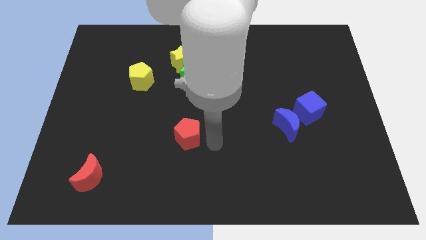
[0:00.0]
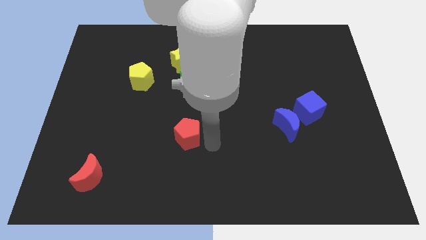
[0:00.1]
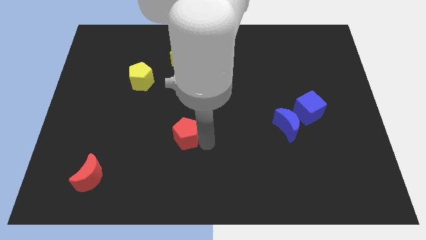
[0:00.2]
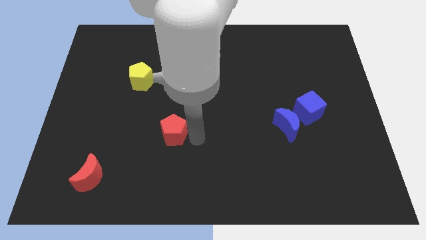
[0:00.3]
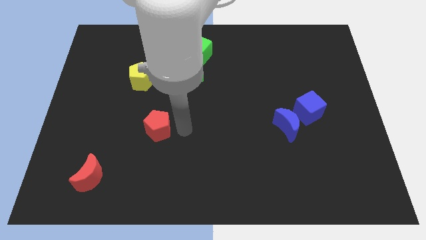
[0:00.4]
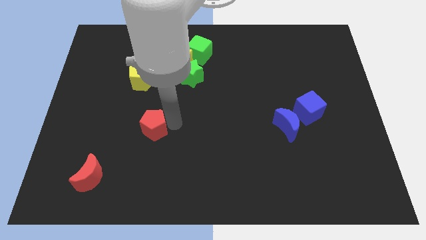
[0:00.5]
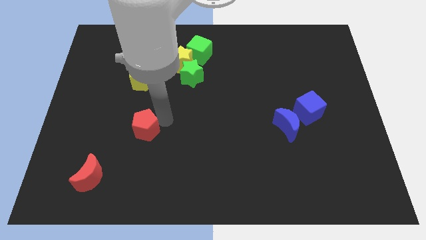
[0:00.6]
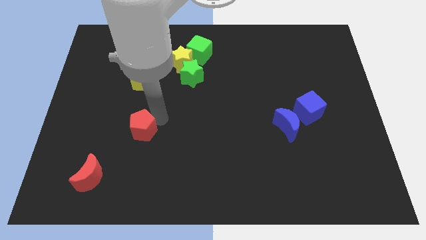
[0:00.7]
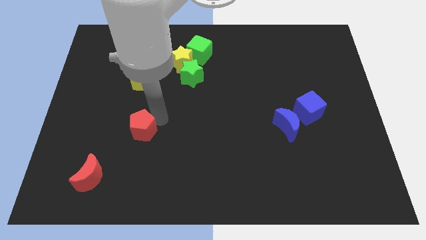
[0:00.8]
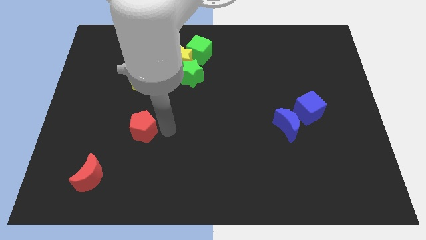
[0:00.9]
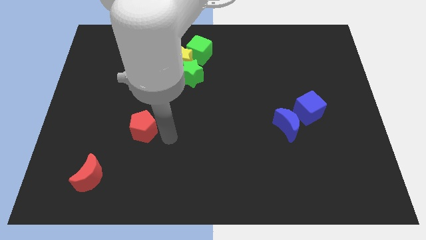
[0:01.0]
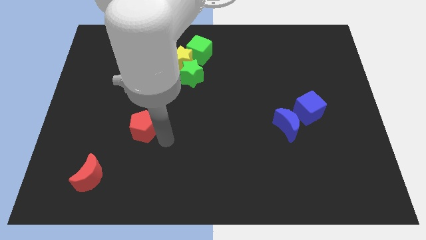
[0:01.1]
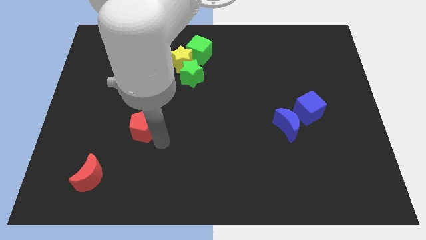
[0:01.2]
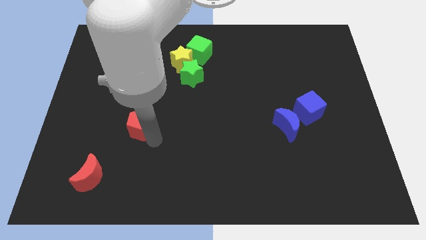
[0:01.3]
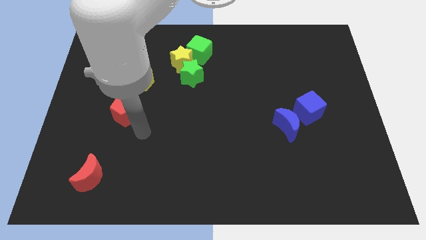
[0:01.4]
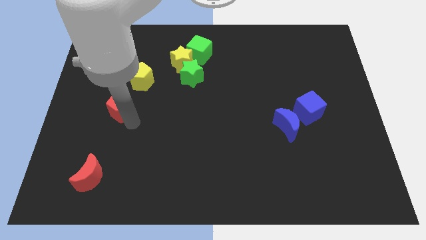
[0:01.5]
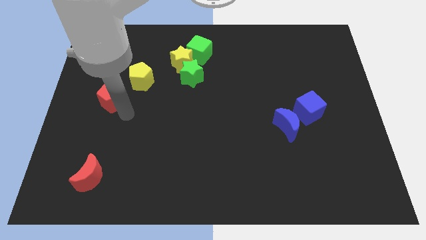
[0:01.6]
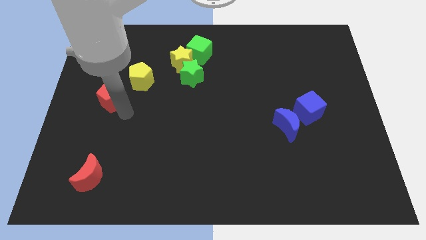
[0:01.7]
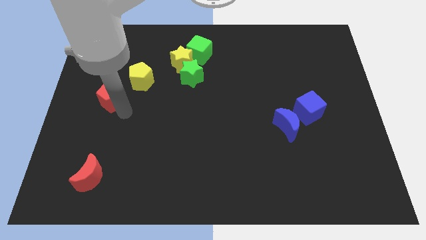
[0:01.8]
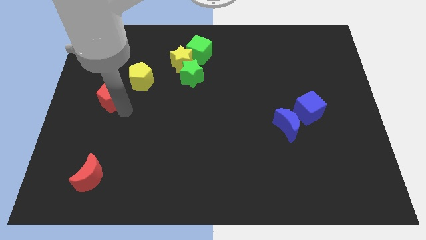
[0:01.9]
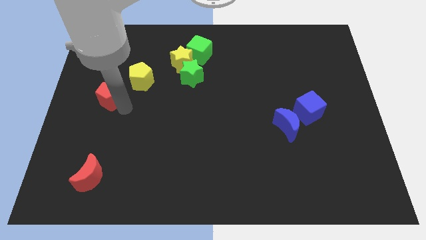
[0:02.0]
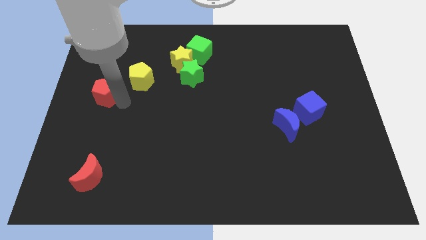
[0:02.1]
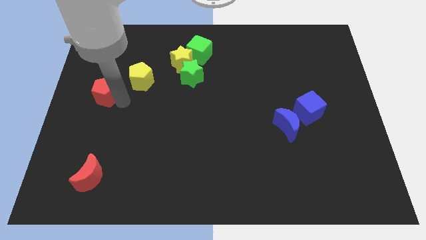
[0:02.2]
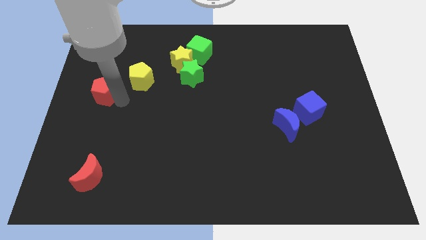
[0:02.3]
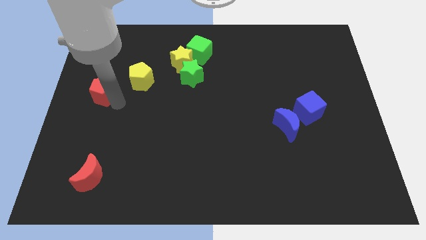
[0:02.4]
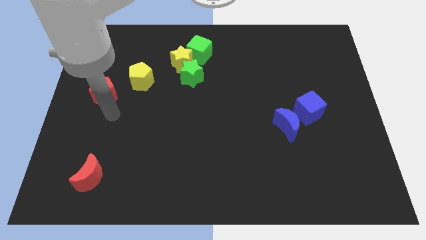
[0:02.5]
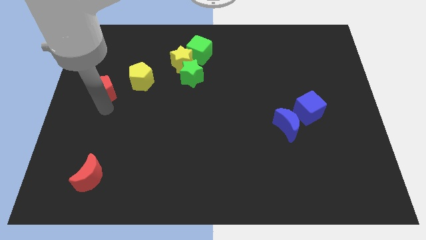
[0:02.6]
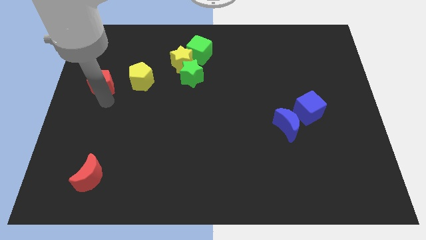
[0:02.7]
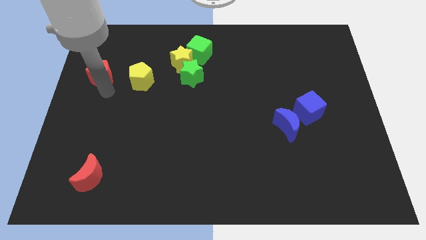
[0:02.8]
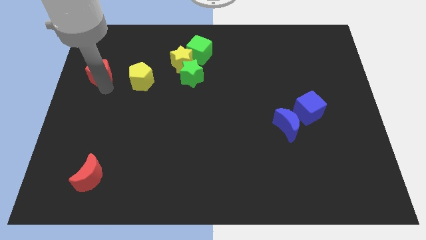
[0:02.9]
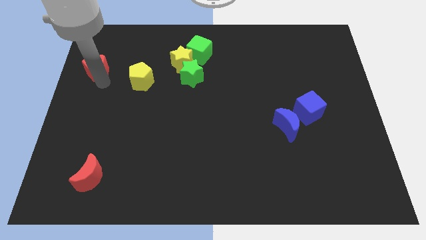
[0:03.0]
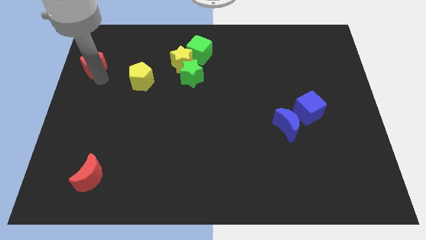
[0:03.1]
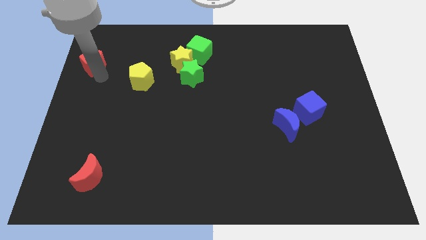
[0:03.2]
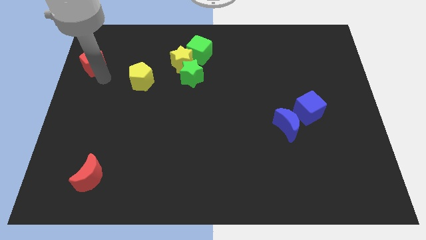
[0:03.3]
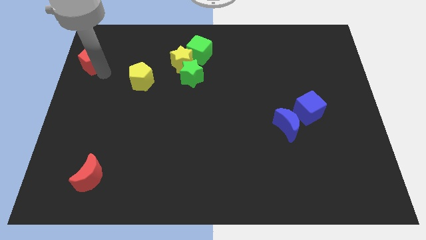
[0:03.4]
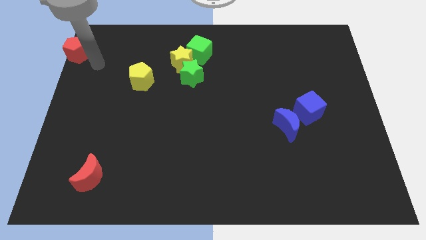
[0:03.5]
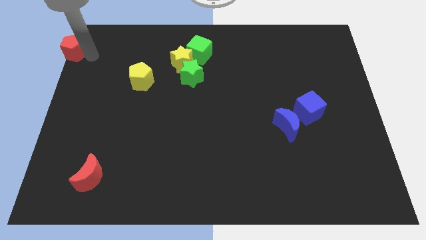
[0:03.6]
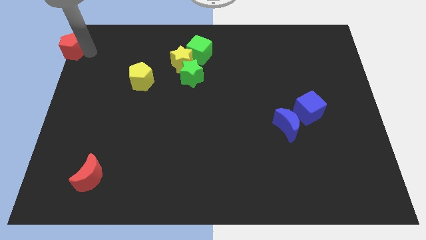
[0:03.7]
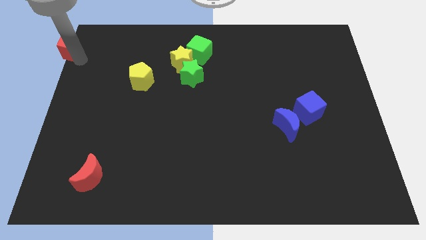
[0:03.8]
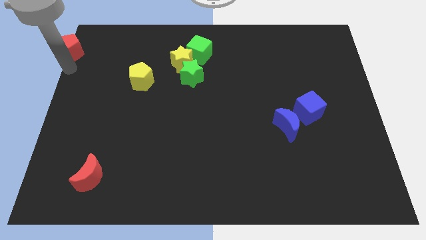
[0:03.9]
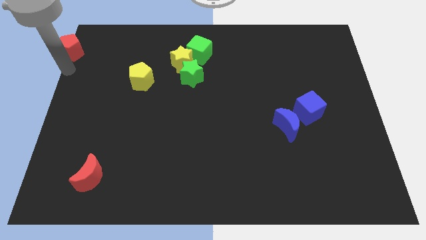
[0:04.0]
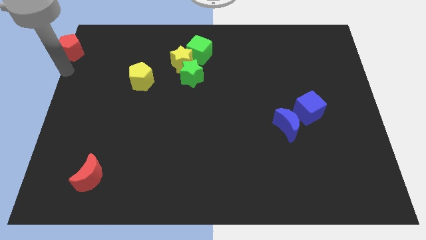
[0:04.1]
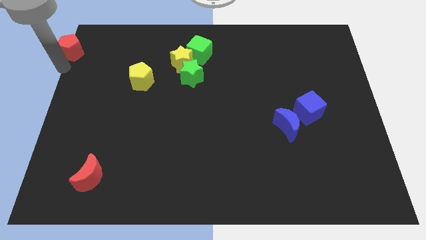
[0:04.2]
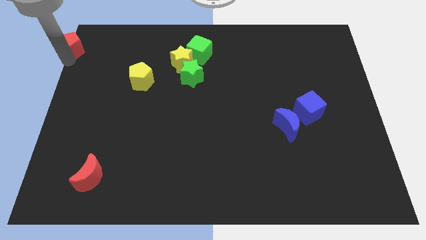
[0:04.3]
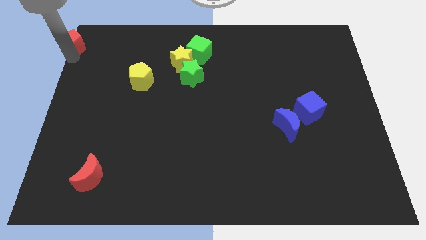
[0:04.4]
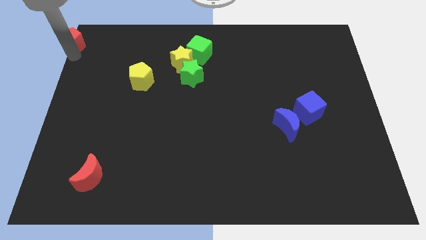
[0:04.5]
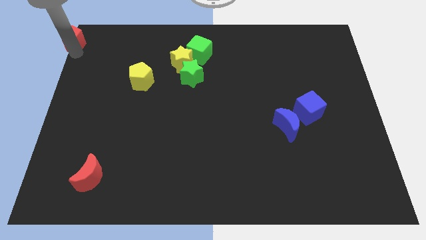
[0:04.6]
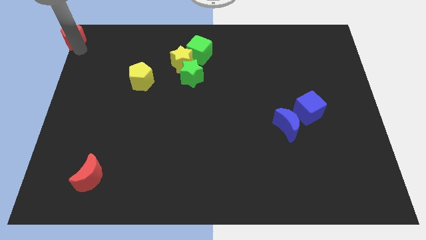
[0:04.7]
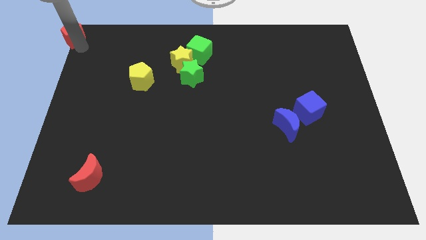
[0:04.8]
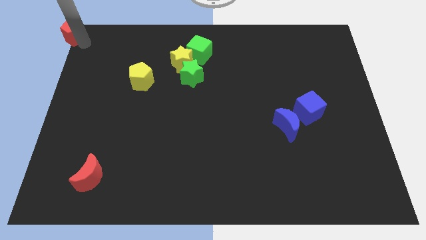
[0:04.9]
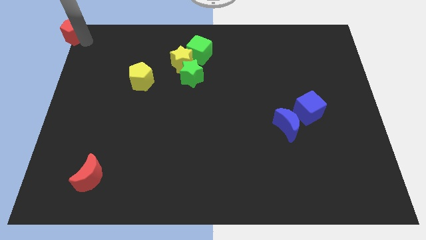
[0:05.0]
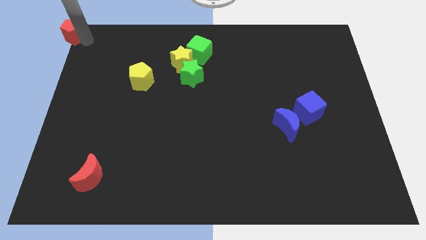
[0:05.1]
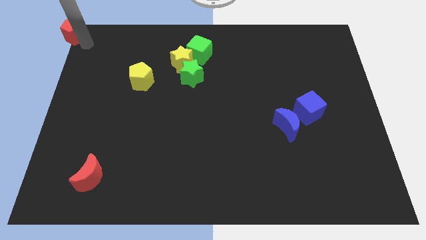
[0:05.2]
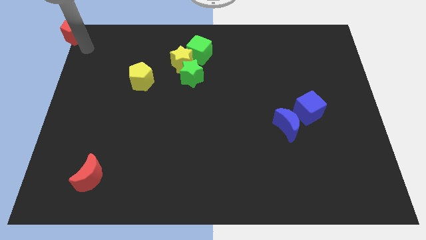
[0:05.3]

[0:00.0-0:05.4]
push the red pentagon to the top left corner of the board

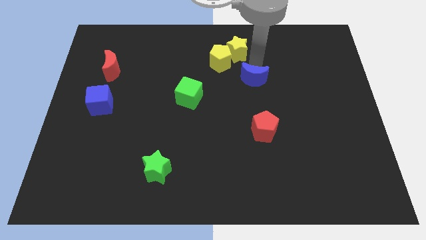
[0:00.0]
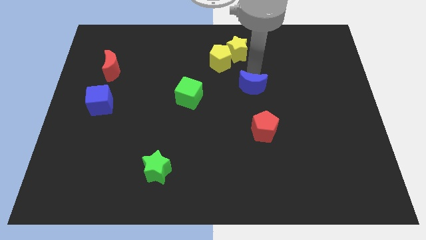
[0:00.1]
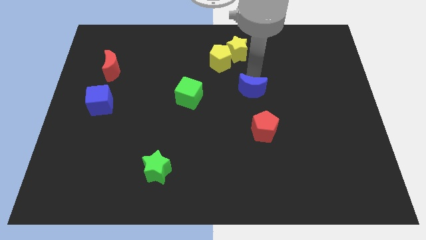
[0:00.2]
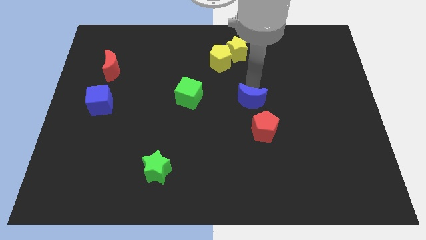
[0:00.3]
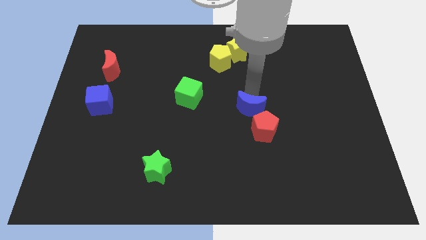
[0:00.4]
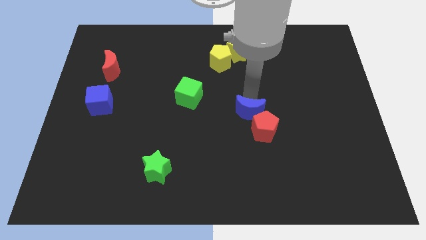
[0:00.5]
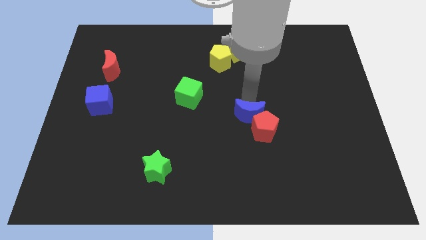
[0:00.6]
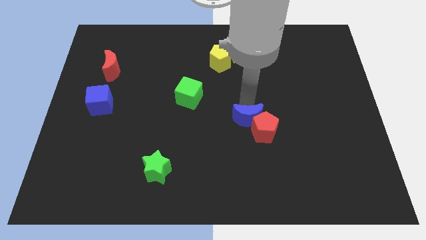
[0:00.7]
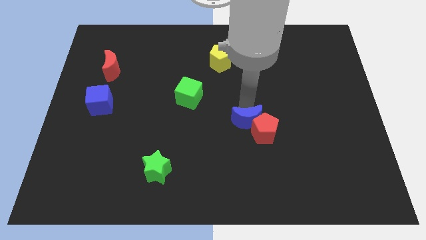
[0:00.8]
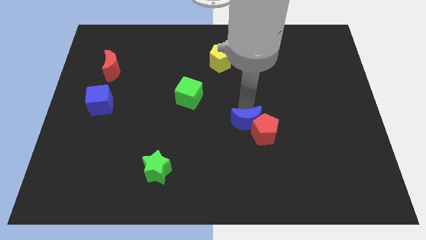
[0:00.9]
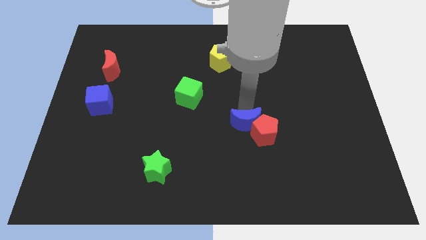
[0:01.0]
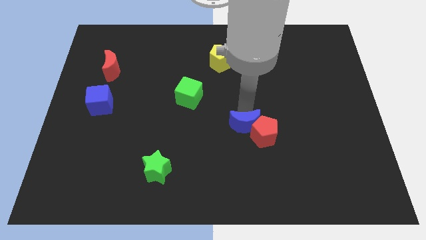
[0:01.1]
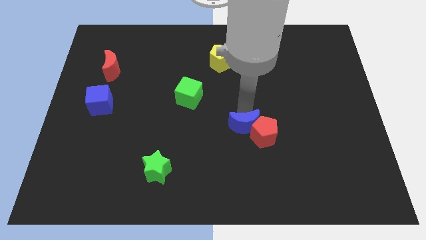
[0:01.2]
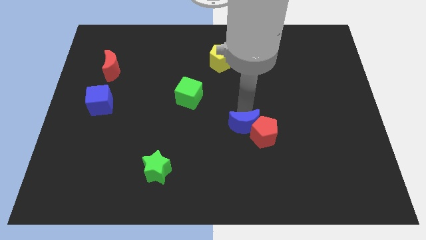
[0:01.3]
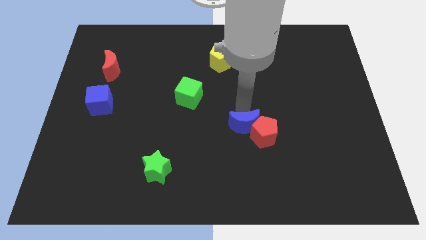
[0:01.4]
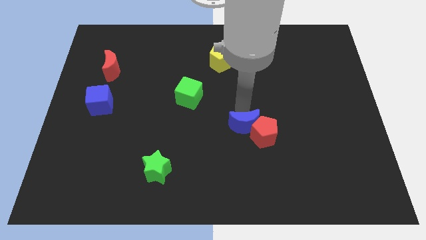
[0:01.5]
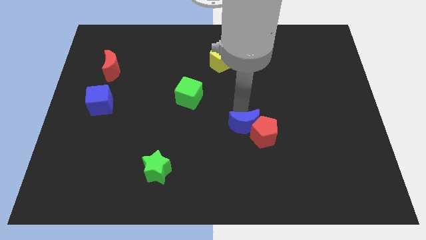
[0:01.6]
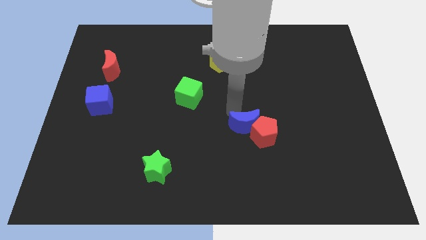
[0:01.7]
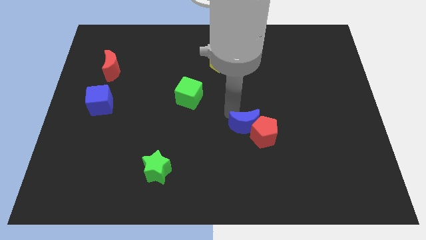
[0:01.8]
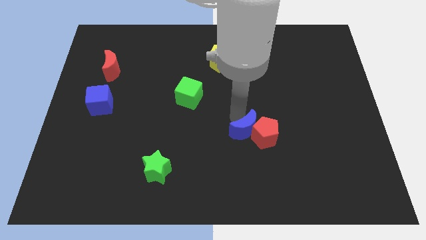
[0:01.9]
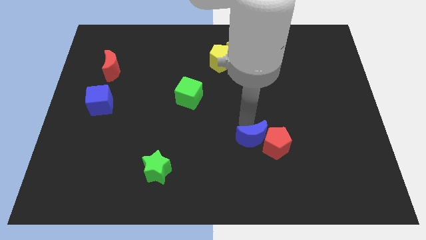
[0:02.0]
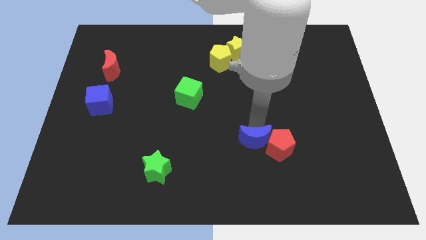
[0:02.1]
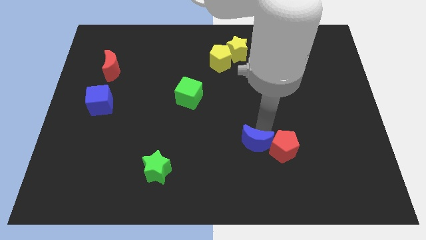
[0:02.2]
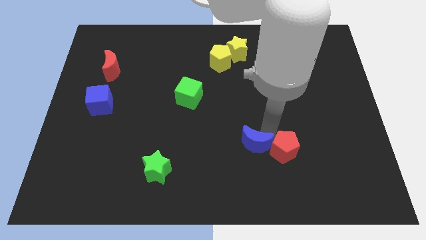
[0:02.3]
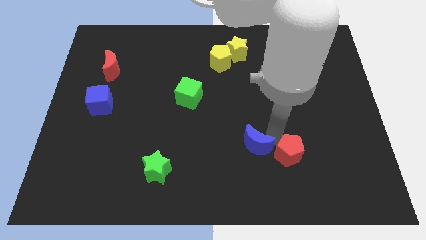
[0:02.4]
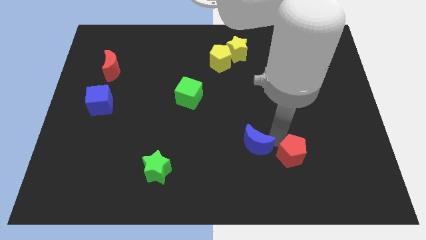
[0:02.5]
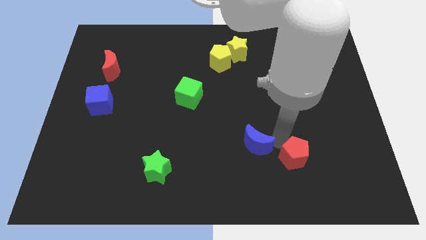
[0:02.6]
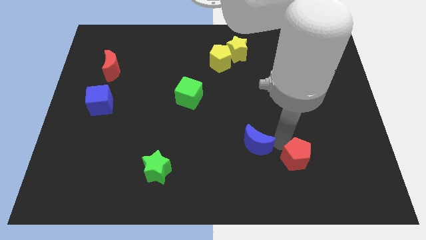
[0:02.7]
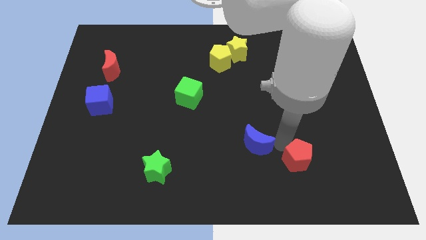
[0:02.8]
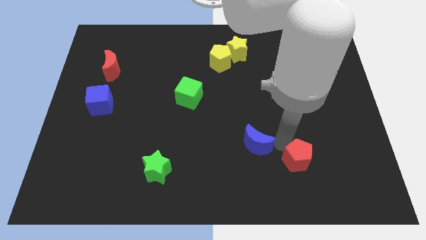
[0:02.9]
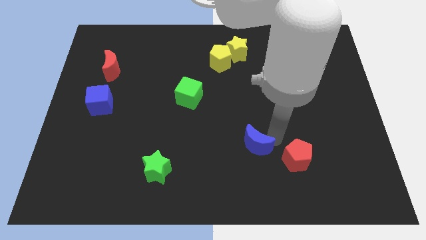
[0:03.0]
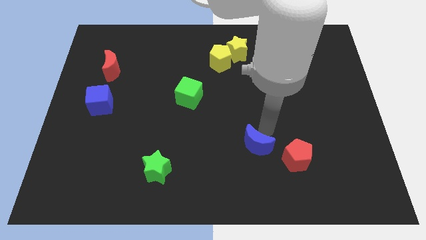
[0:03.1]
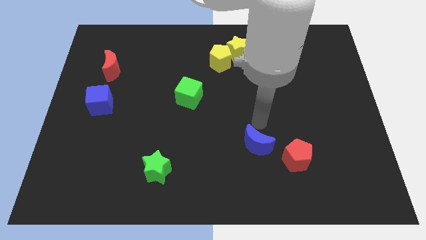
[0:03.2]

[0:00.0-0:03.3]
push the blue moon into the red pentagon

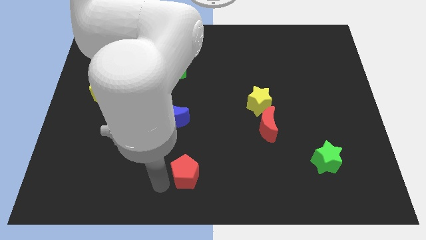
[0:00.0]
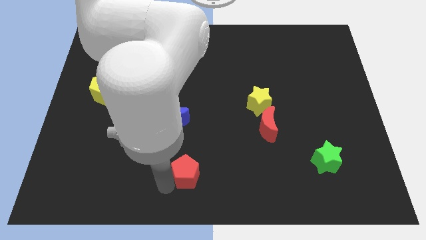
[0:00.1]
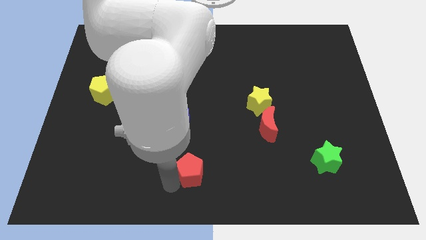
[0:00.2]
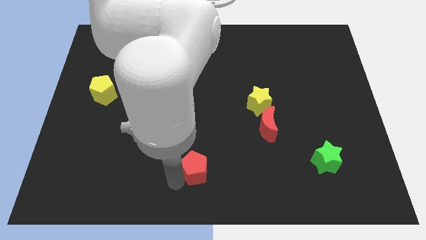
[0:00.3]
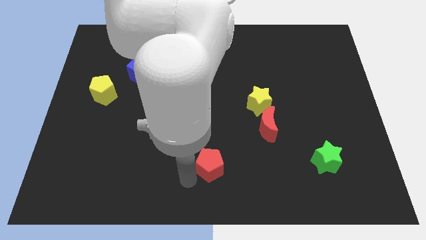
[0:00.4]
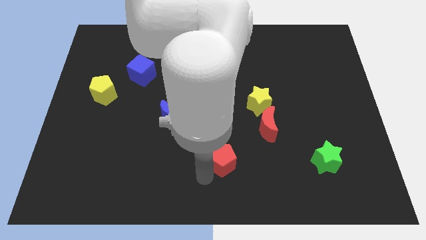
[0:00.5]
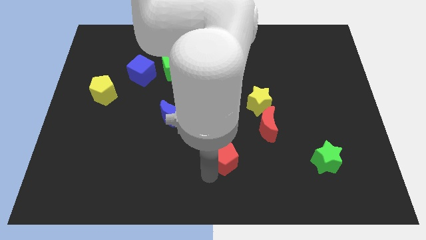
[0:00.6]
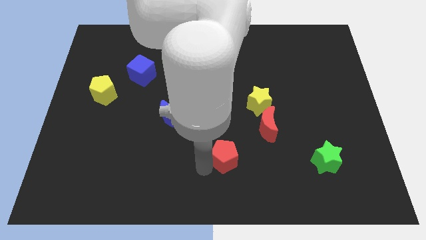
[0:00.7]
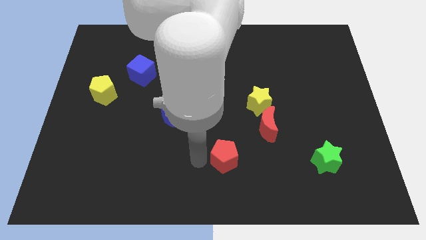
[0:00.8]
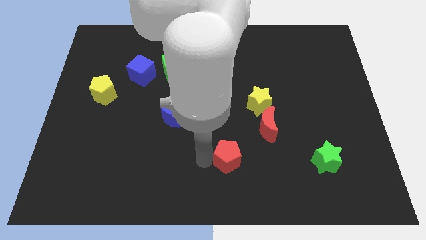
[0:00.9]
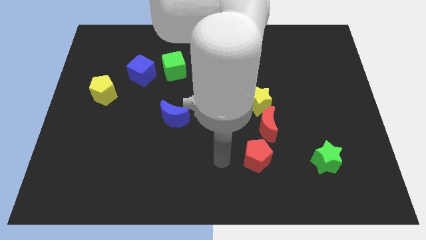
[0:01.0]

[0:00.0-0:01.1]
move the red pentagon to the bottom center
